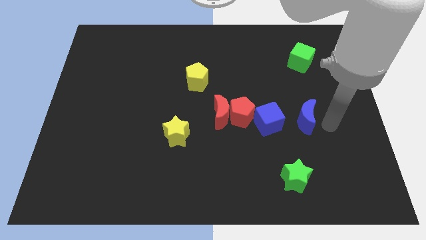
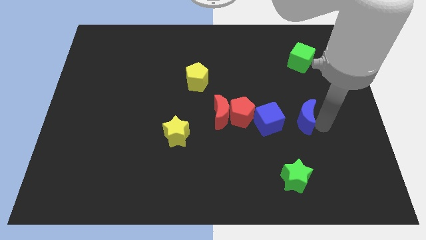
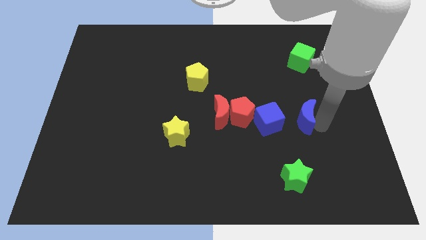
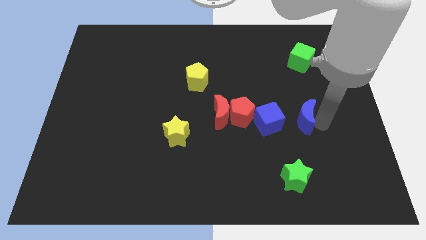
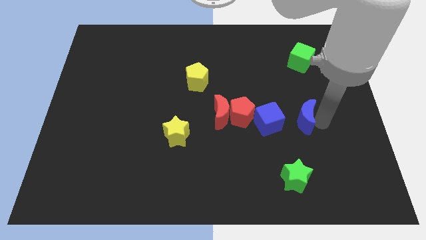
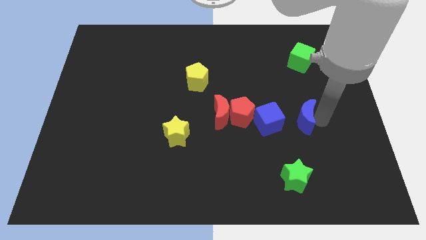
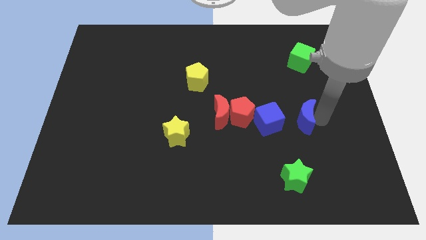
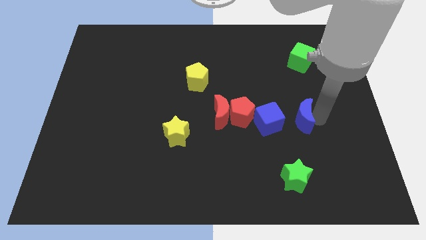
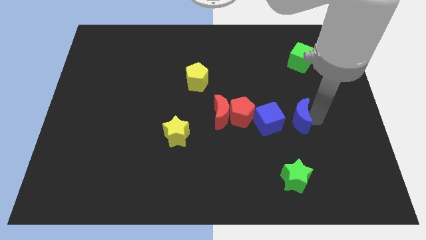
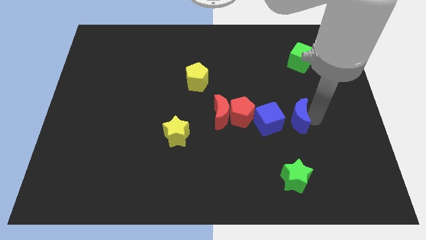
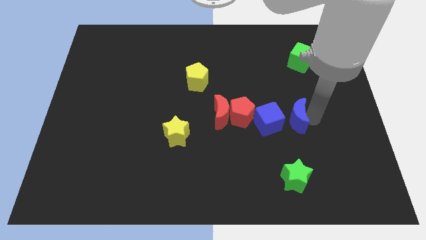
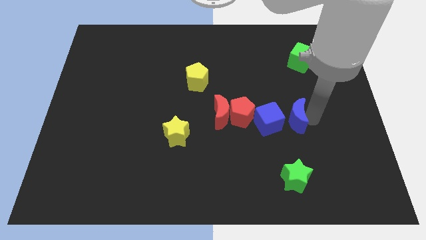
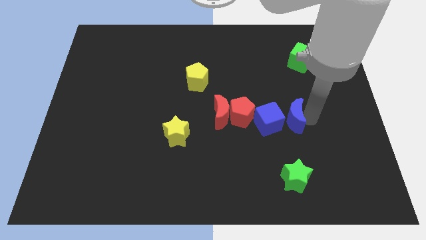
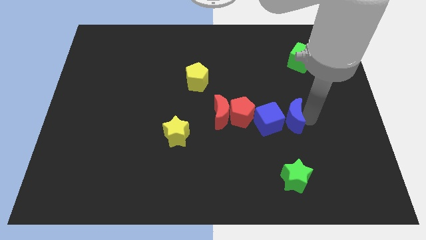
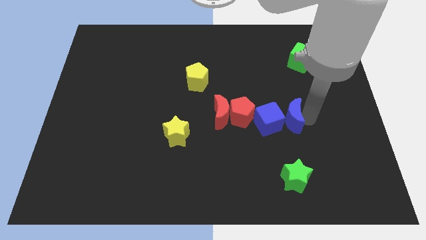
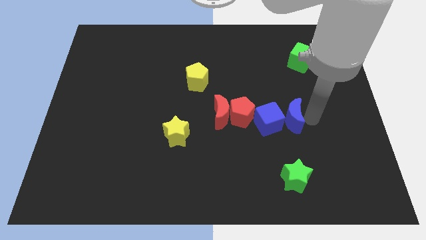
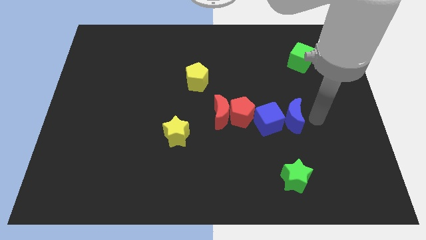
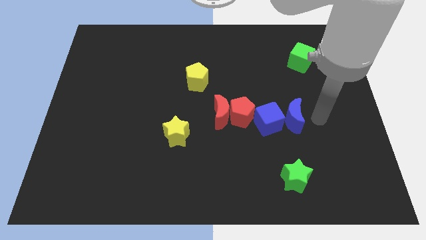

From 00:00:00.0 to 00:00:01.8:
slide the blue moon close to the left side of the blue cube

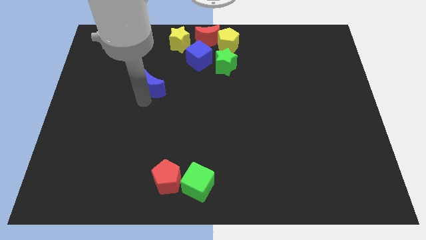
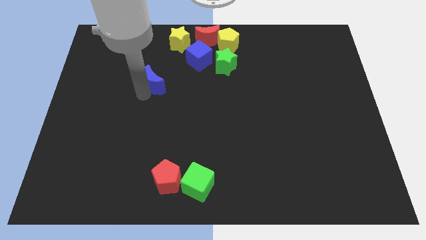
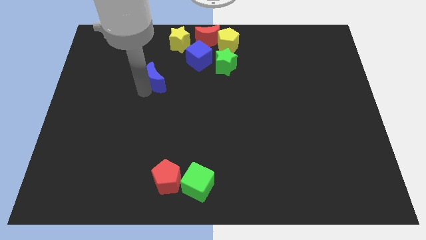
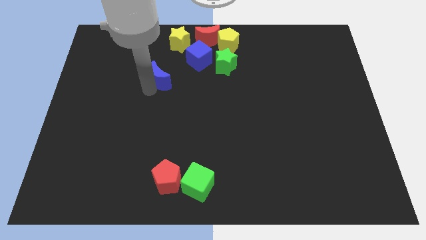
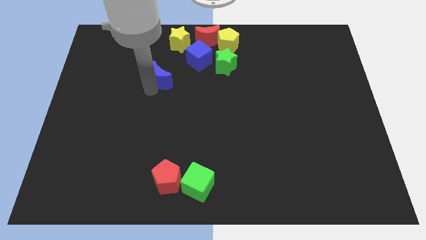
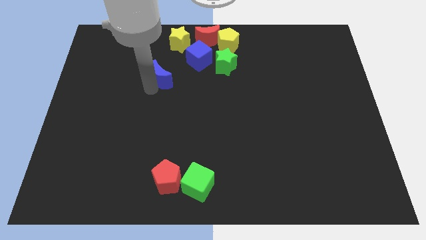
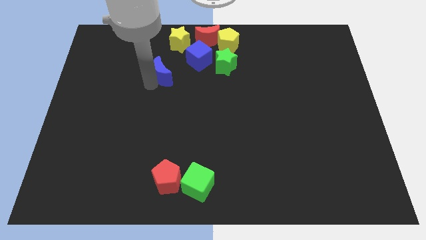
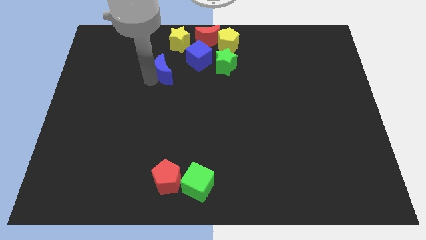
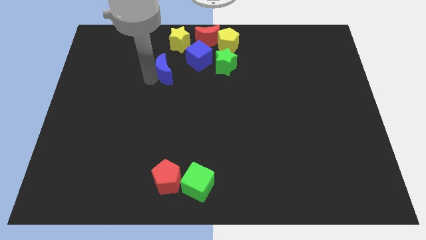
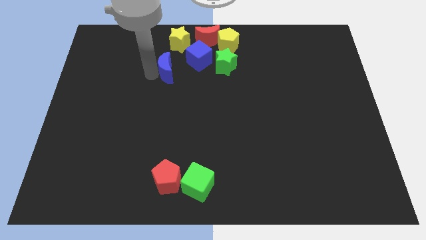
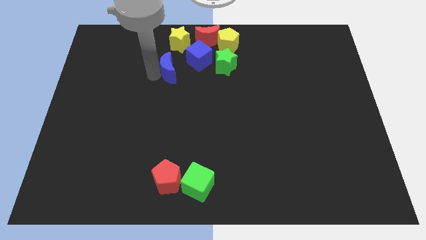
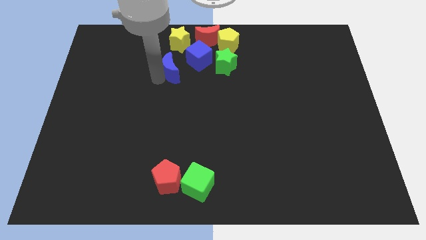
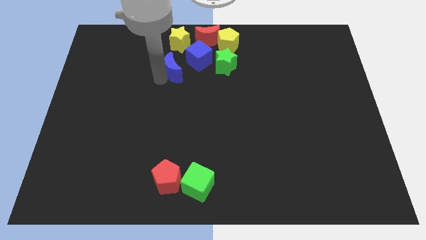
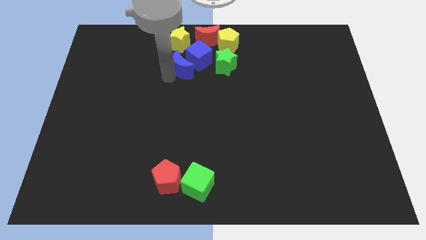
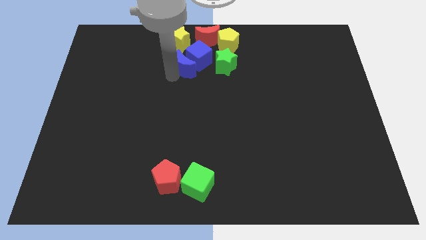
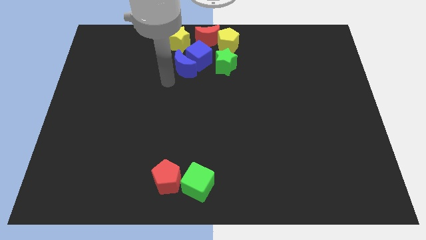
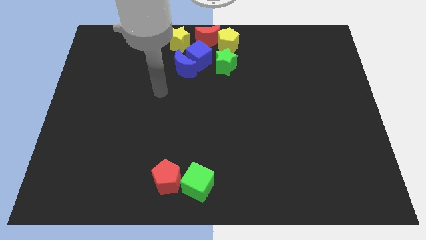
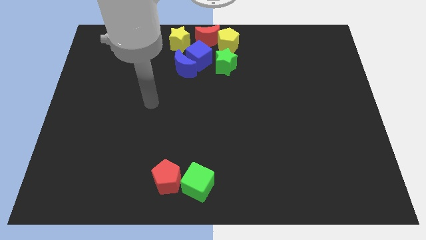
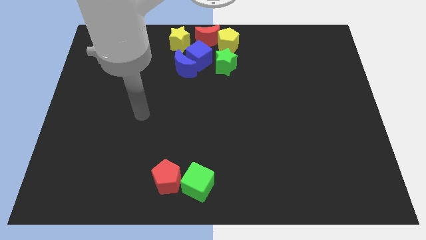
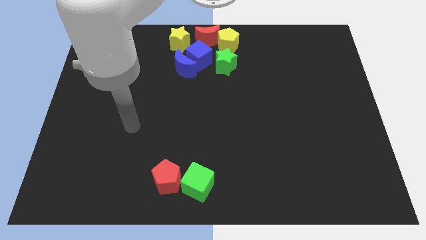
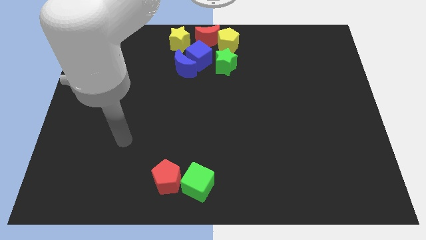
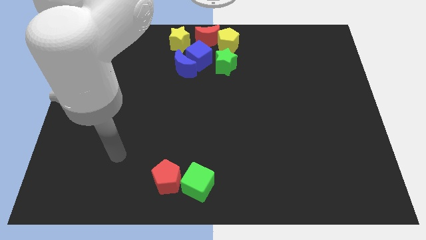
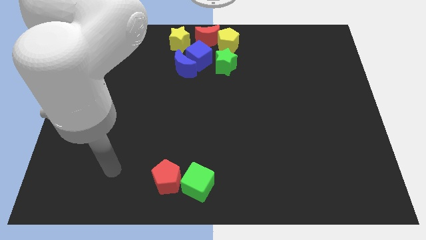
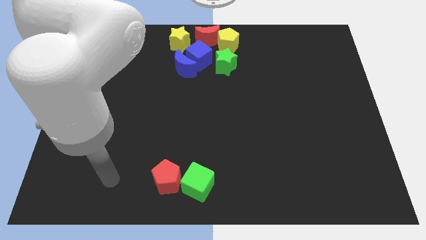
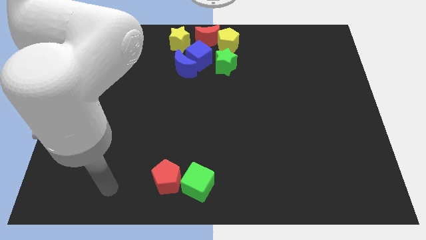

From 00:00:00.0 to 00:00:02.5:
move blue moon close to blue cube

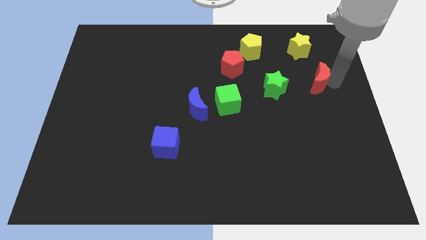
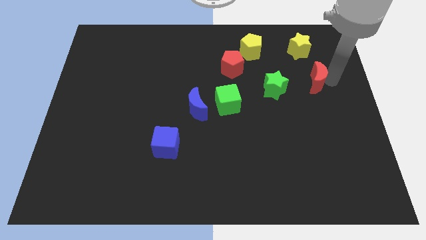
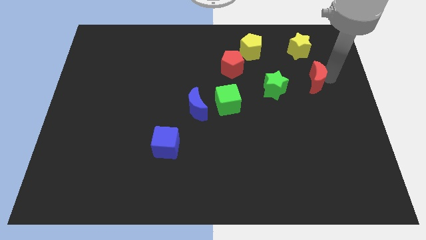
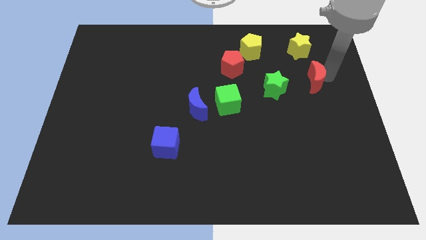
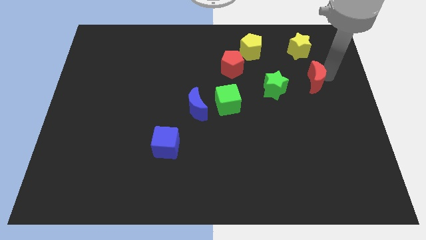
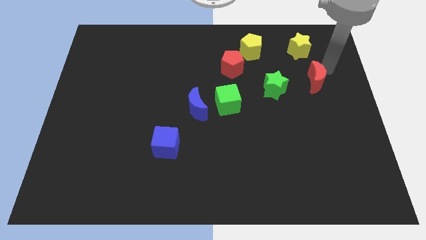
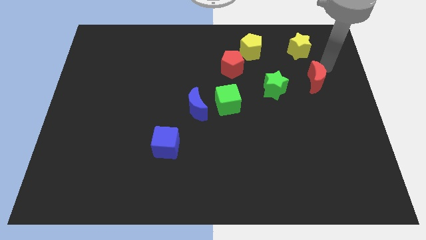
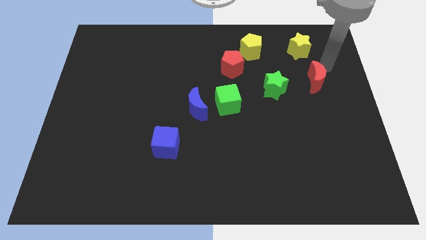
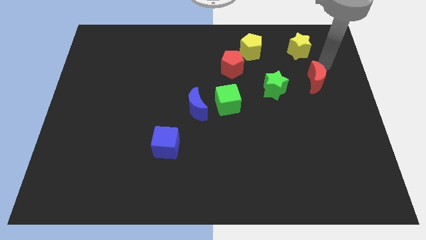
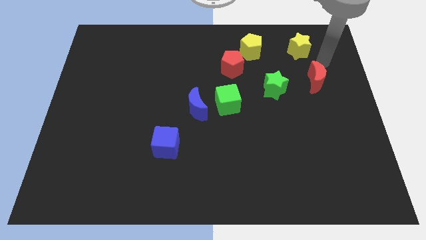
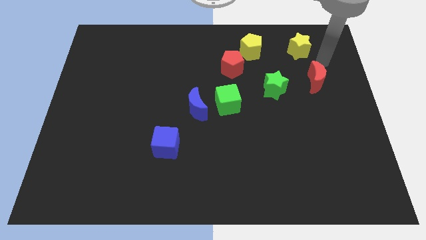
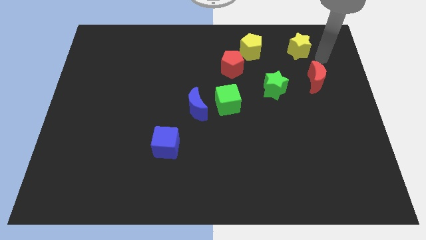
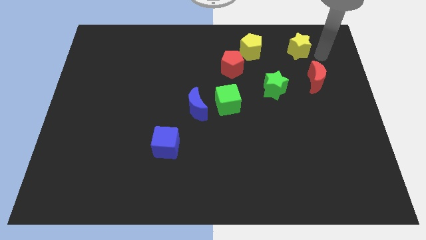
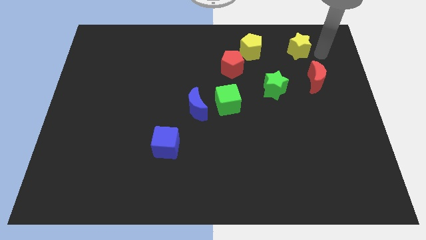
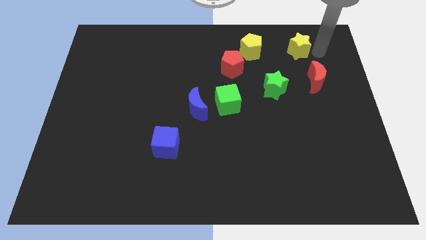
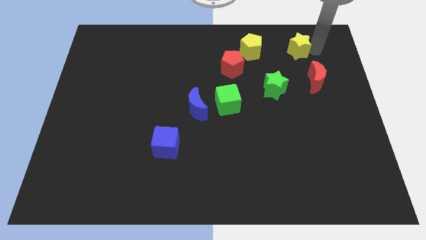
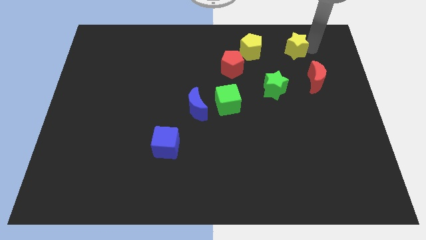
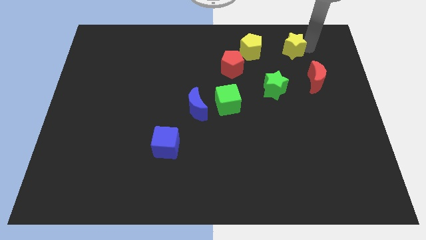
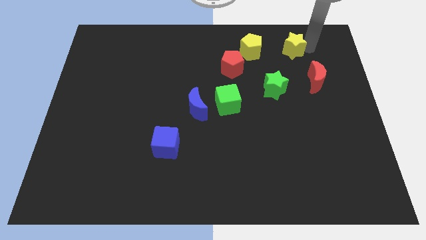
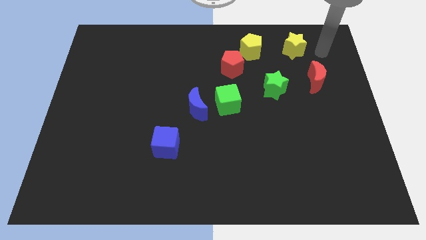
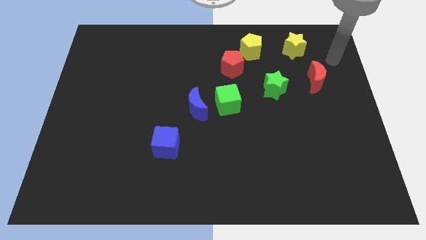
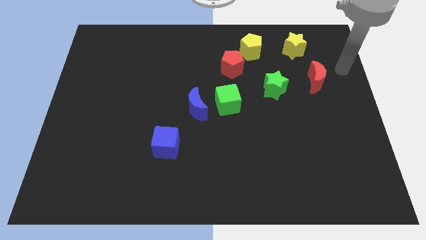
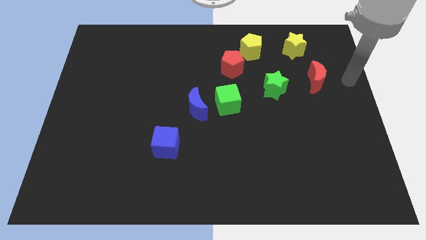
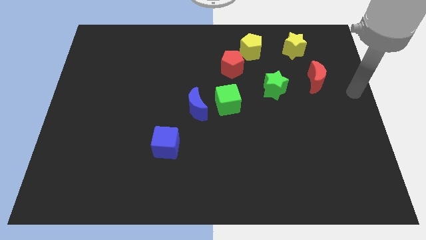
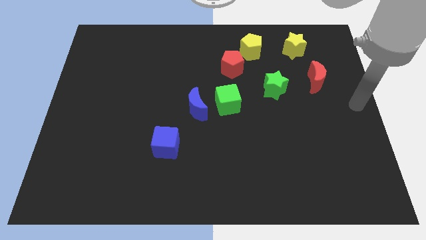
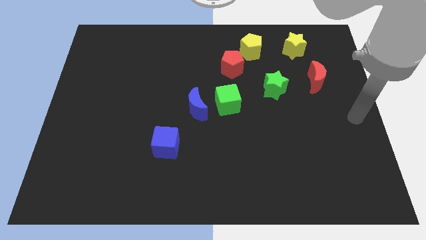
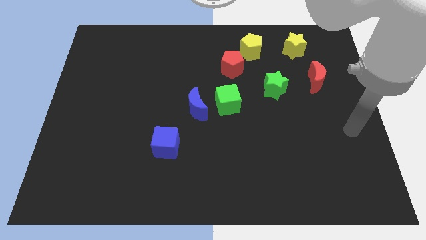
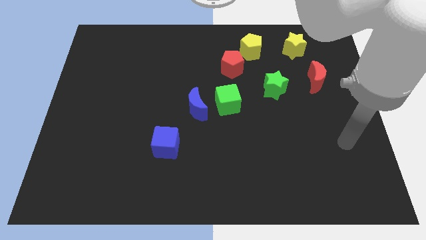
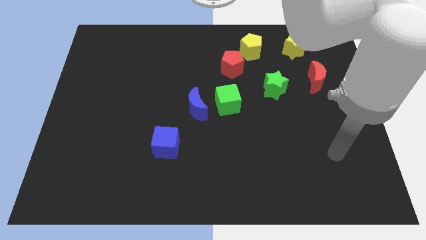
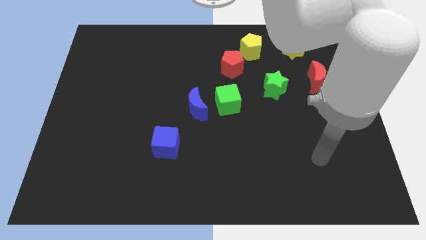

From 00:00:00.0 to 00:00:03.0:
move the arm away from the red crescent

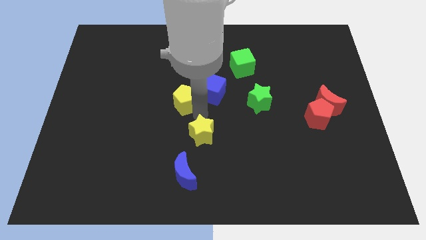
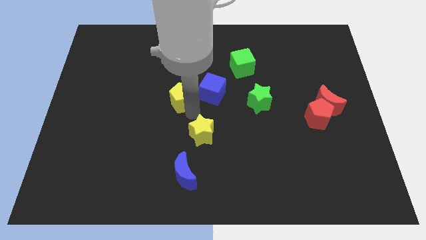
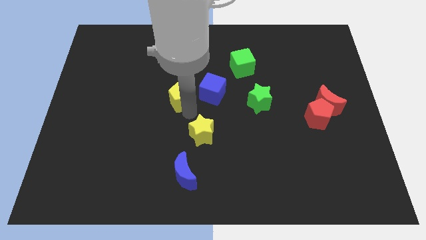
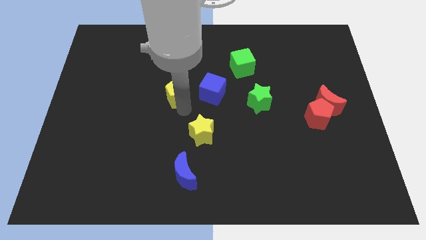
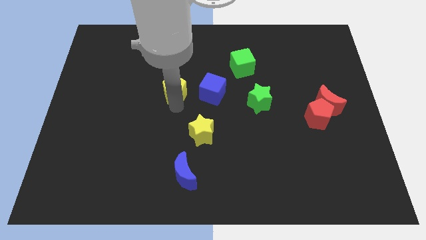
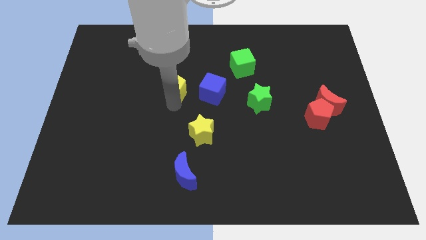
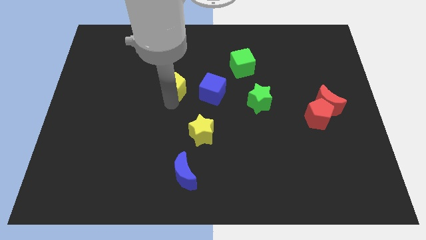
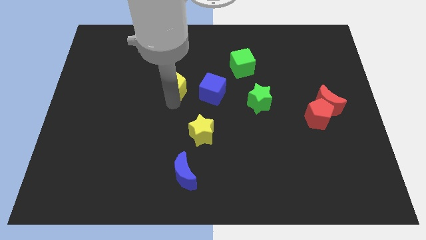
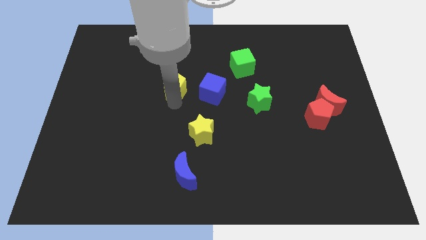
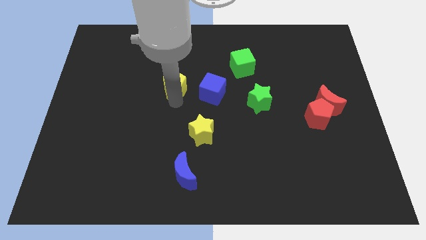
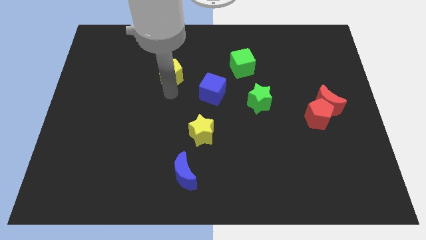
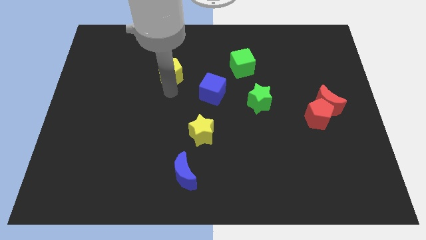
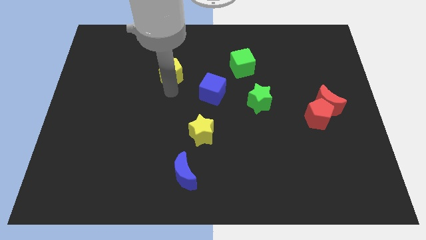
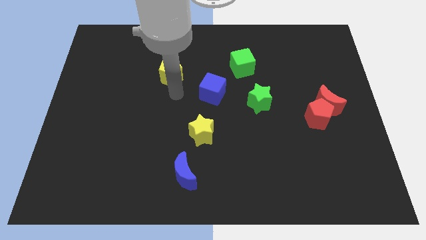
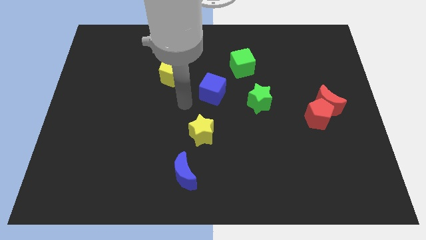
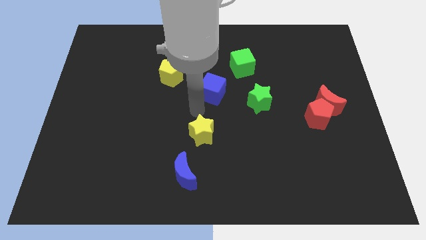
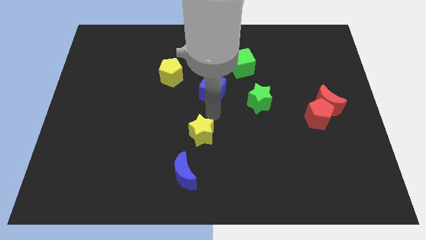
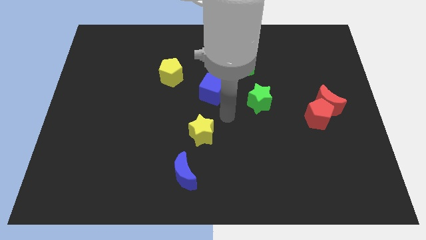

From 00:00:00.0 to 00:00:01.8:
move your arm away from yellow pentagon
